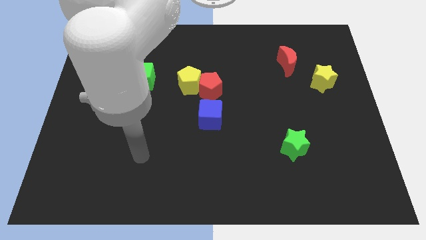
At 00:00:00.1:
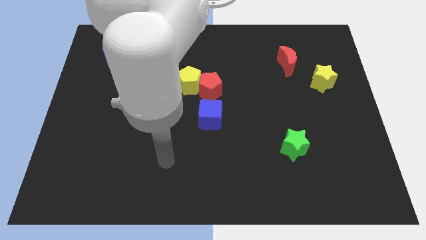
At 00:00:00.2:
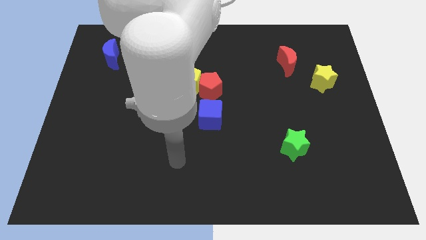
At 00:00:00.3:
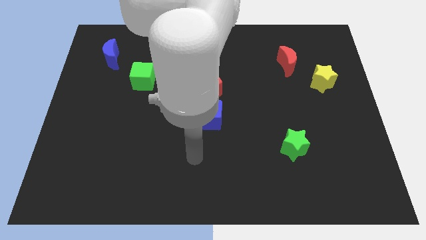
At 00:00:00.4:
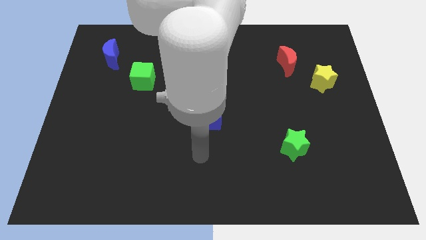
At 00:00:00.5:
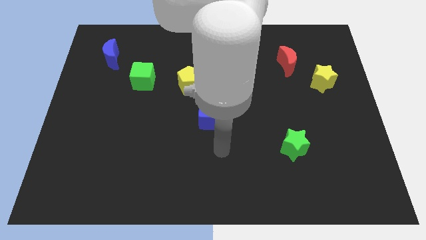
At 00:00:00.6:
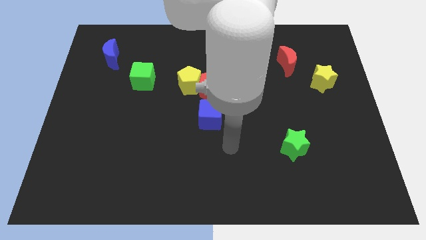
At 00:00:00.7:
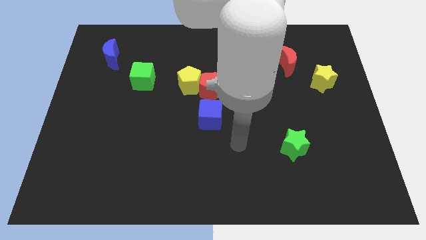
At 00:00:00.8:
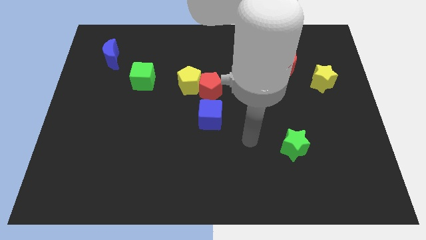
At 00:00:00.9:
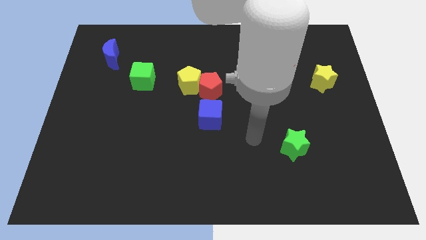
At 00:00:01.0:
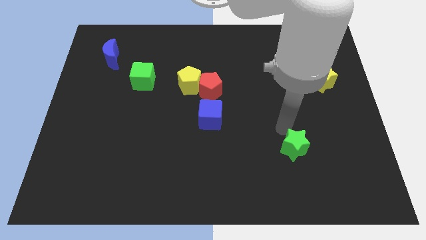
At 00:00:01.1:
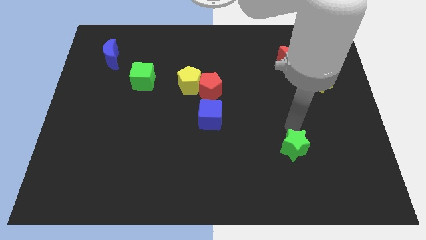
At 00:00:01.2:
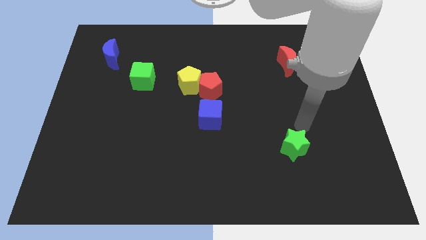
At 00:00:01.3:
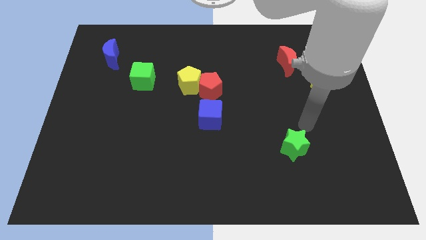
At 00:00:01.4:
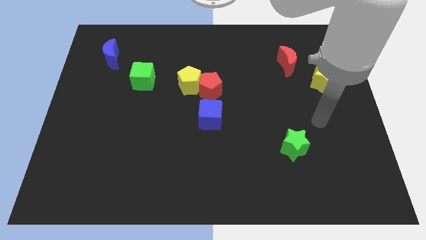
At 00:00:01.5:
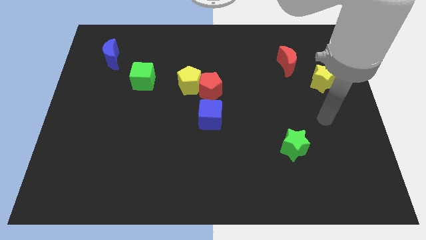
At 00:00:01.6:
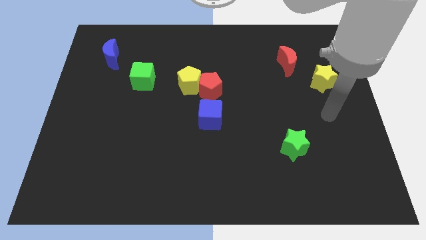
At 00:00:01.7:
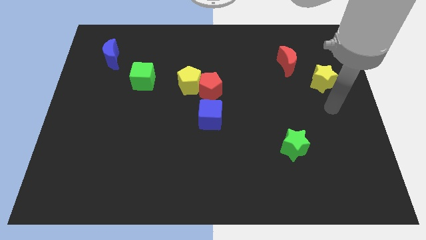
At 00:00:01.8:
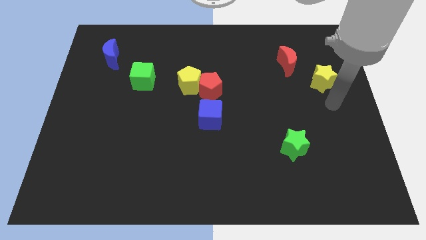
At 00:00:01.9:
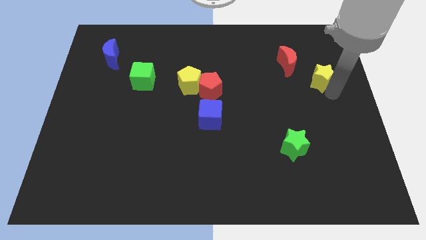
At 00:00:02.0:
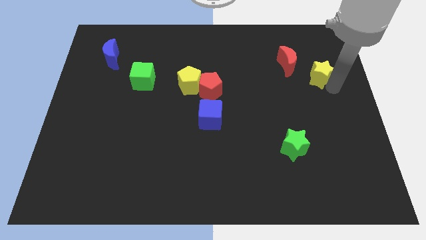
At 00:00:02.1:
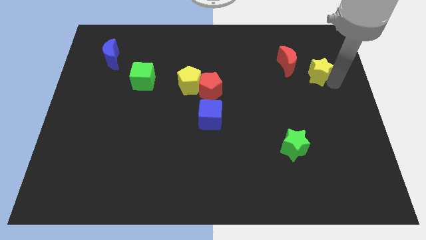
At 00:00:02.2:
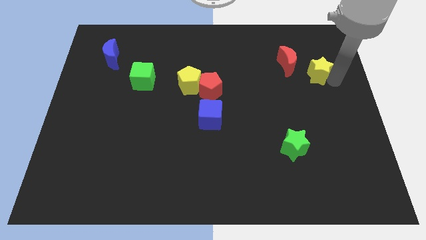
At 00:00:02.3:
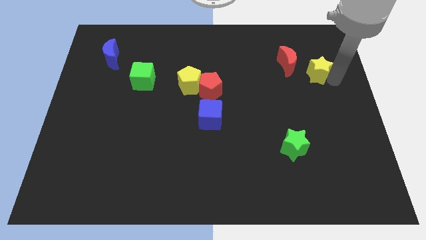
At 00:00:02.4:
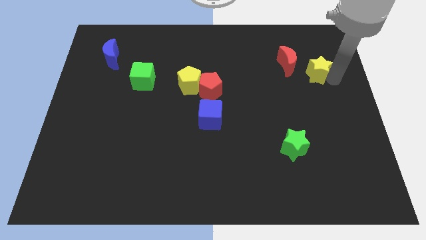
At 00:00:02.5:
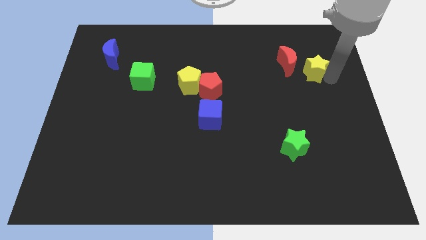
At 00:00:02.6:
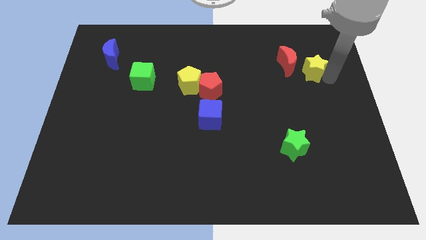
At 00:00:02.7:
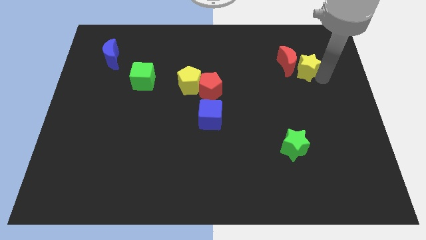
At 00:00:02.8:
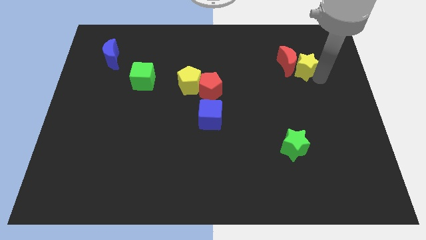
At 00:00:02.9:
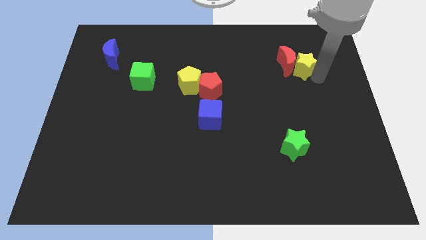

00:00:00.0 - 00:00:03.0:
push the yellow star next to the red moon

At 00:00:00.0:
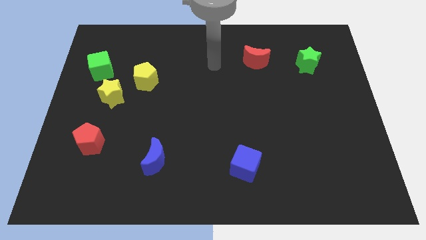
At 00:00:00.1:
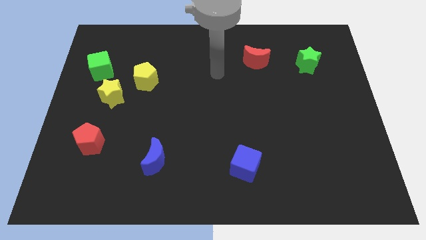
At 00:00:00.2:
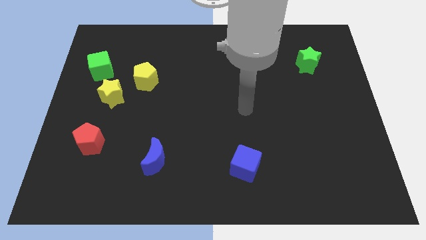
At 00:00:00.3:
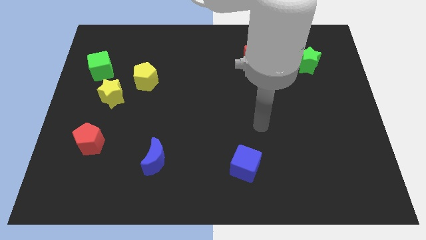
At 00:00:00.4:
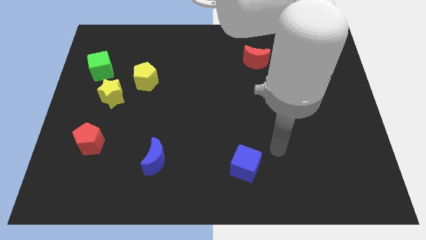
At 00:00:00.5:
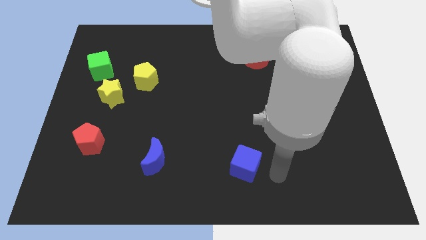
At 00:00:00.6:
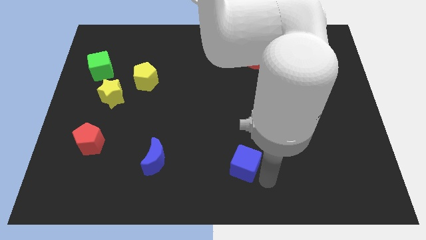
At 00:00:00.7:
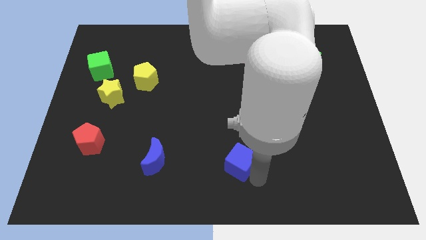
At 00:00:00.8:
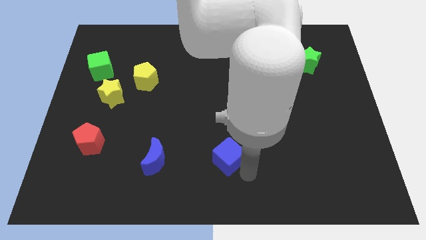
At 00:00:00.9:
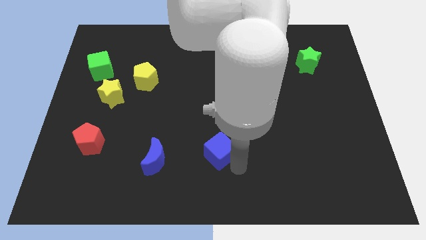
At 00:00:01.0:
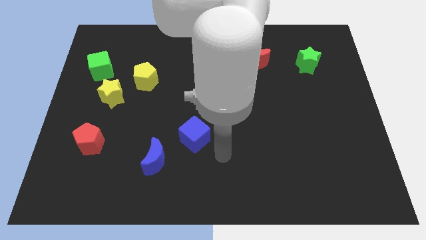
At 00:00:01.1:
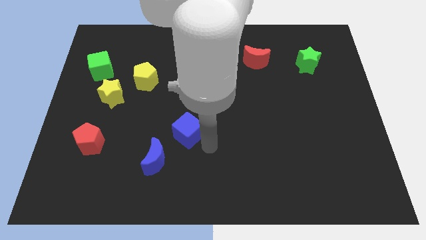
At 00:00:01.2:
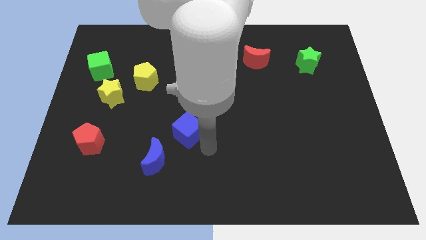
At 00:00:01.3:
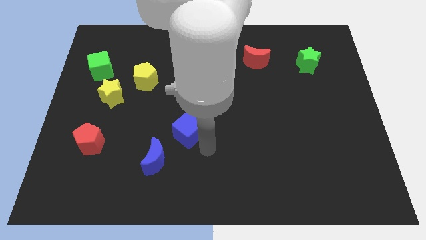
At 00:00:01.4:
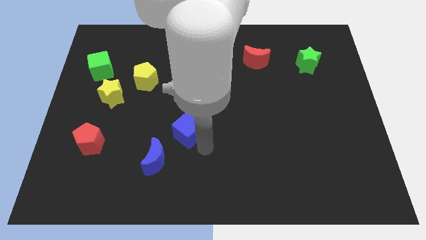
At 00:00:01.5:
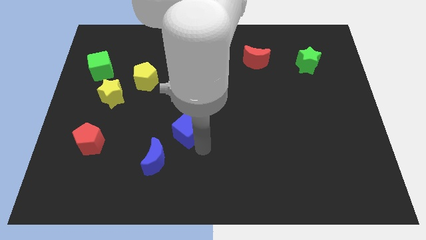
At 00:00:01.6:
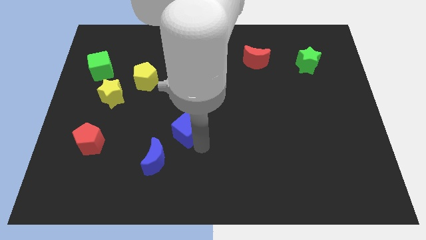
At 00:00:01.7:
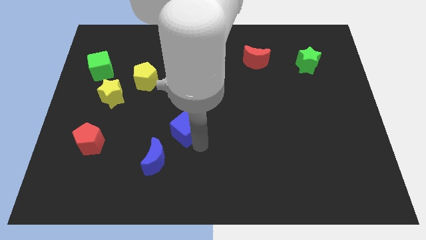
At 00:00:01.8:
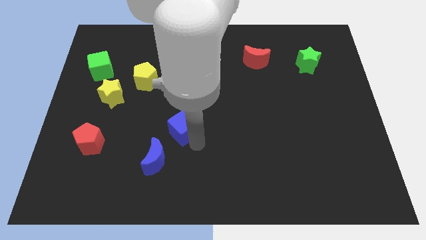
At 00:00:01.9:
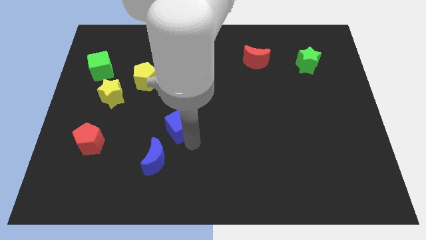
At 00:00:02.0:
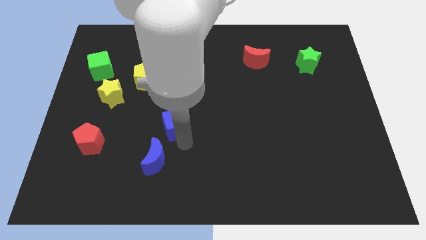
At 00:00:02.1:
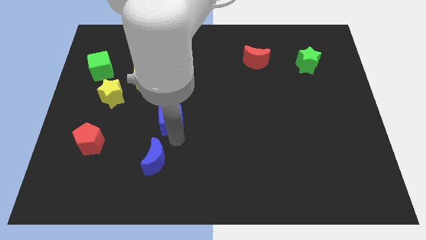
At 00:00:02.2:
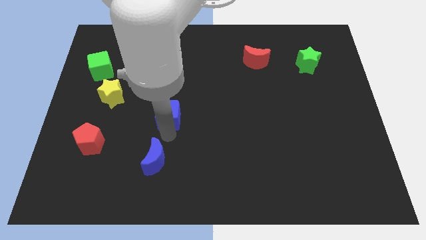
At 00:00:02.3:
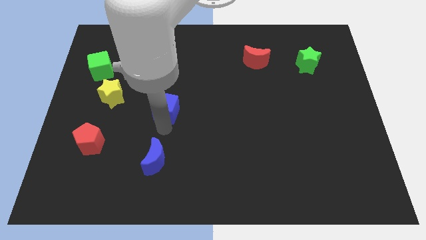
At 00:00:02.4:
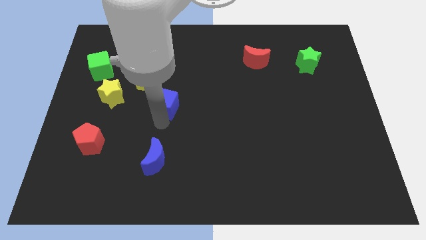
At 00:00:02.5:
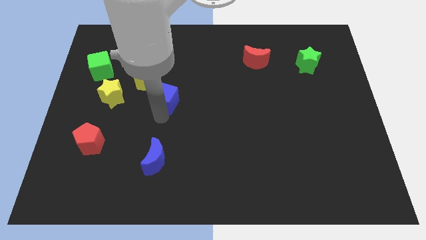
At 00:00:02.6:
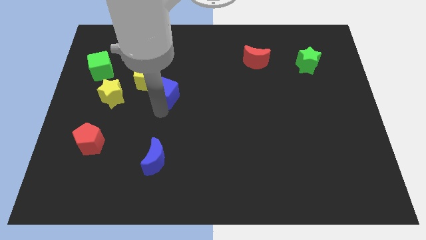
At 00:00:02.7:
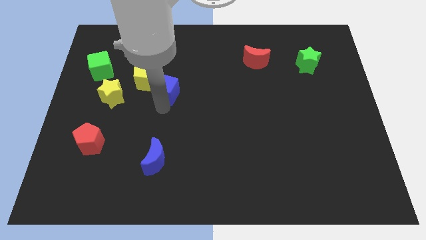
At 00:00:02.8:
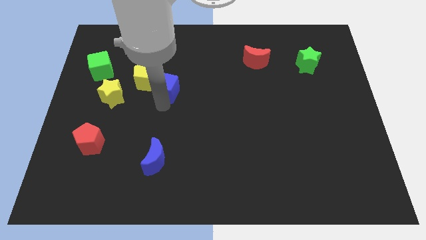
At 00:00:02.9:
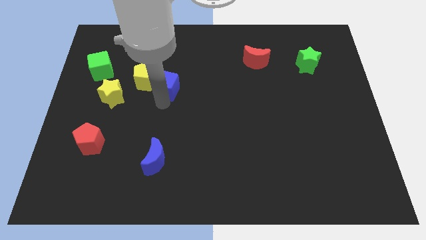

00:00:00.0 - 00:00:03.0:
put the blue cube next to the yellow pentagon

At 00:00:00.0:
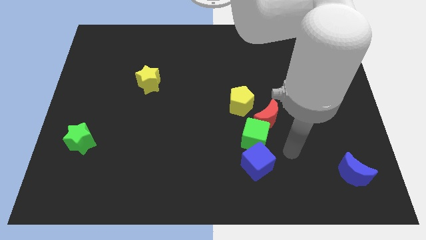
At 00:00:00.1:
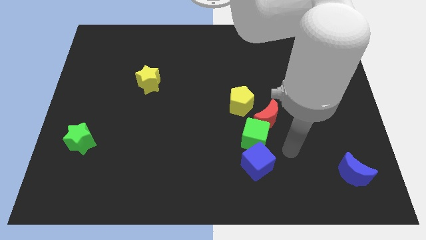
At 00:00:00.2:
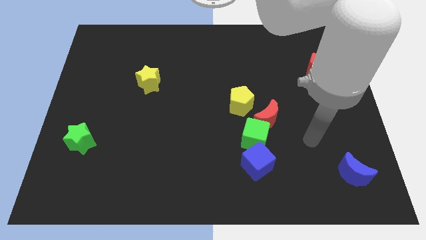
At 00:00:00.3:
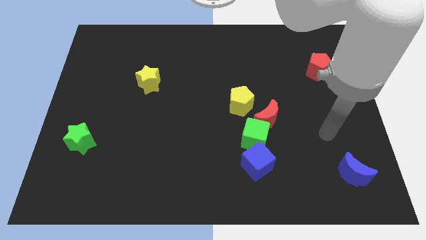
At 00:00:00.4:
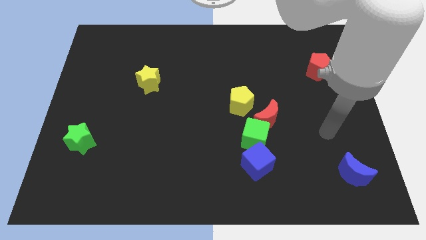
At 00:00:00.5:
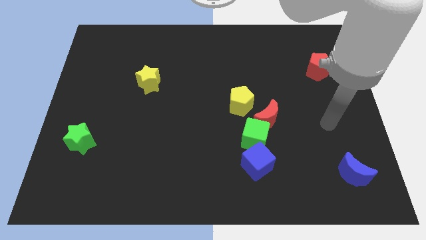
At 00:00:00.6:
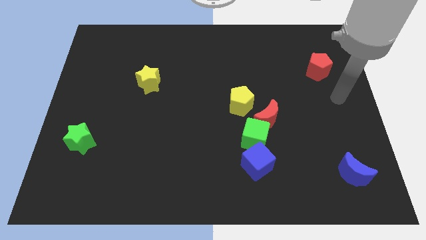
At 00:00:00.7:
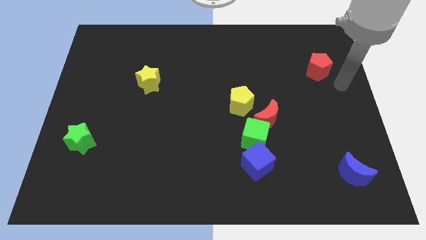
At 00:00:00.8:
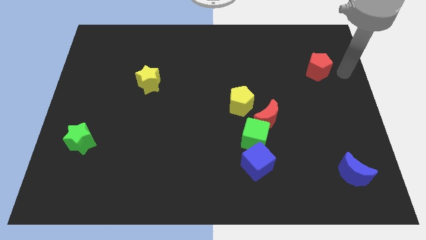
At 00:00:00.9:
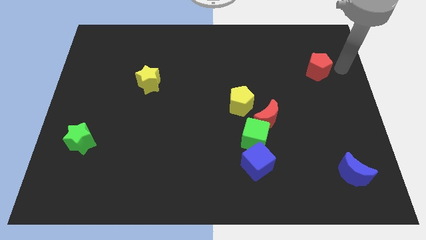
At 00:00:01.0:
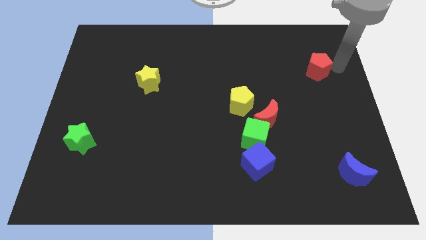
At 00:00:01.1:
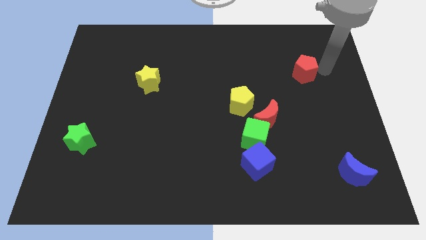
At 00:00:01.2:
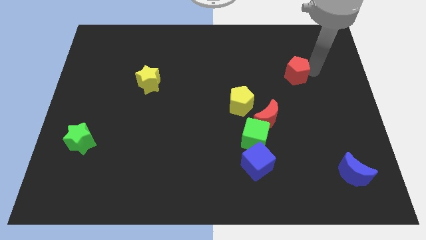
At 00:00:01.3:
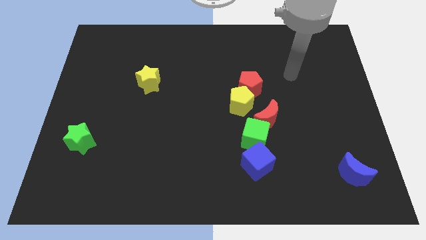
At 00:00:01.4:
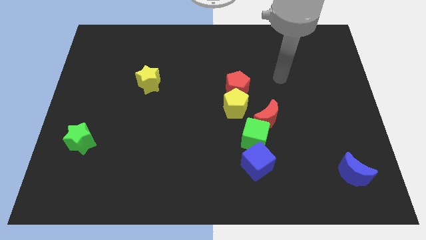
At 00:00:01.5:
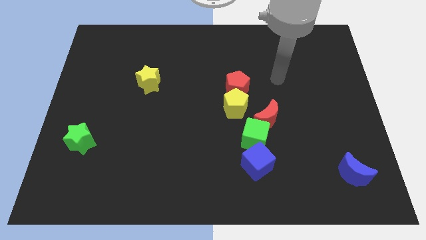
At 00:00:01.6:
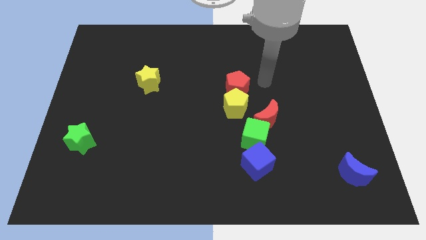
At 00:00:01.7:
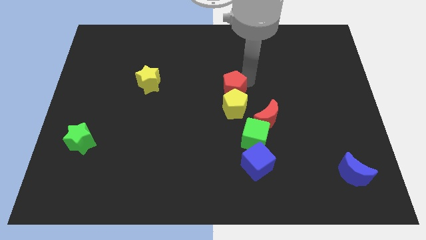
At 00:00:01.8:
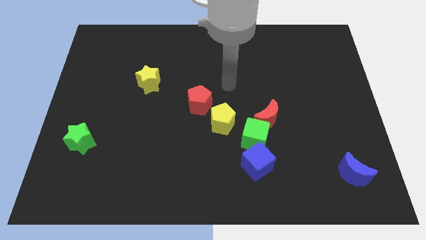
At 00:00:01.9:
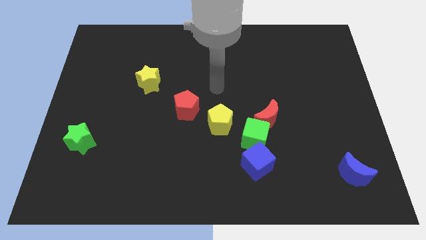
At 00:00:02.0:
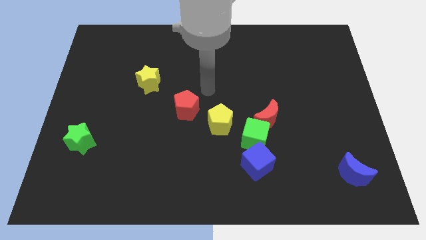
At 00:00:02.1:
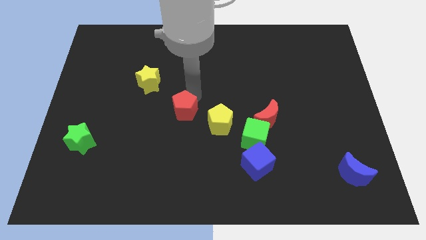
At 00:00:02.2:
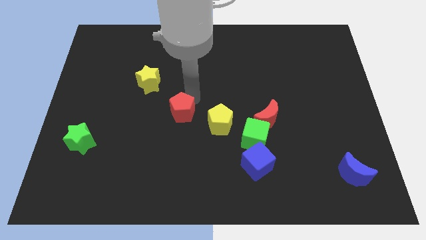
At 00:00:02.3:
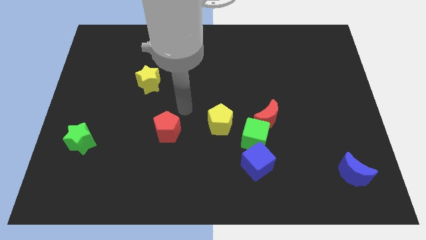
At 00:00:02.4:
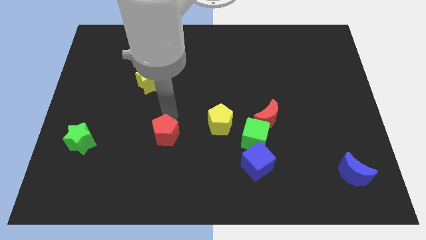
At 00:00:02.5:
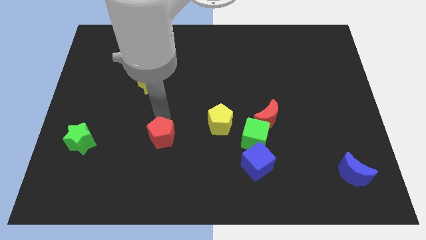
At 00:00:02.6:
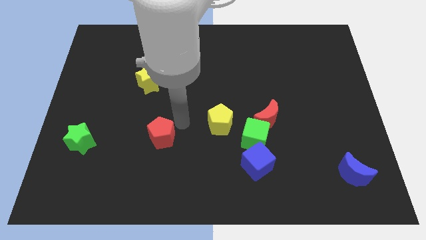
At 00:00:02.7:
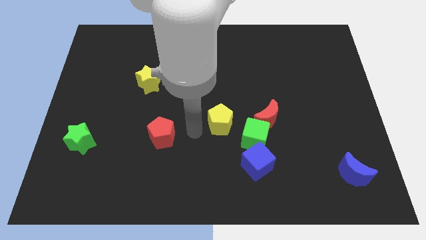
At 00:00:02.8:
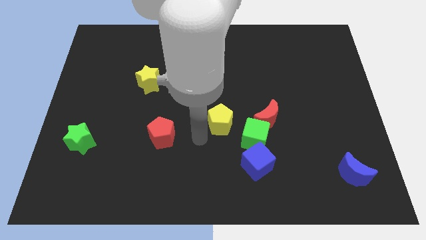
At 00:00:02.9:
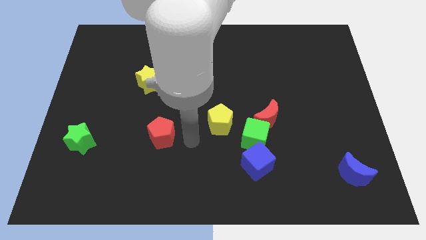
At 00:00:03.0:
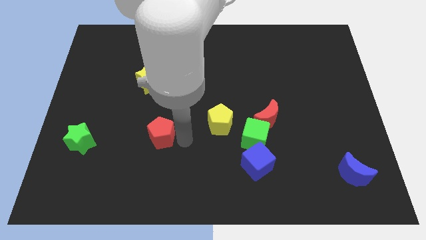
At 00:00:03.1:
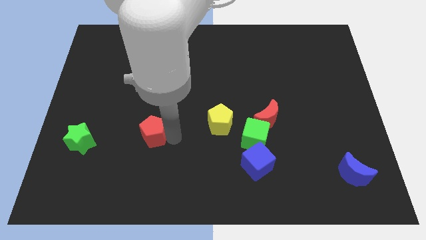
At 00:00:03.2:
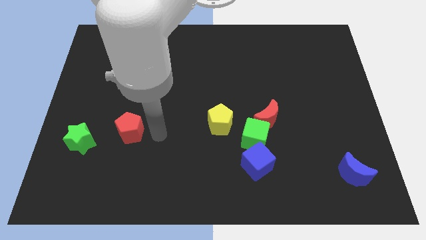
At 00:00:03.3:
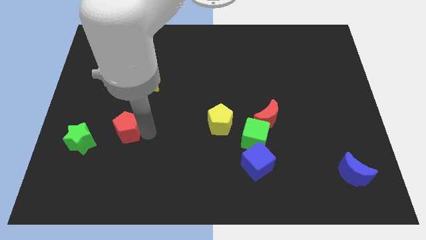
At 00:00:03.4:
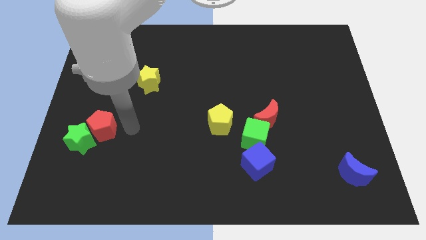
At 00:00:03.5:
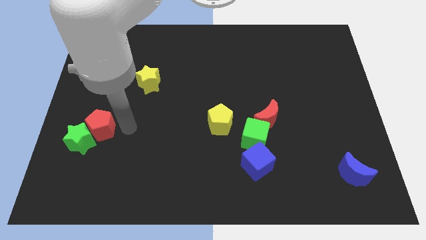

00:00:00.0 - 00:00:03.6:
put the red pentagon next to the green star
